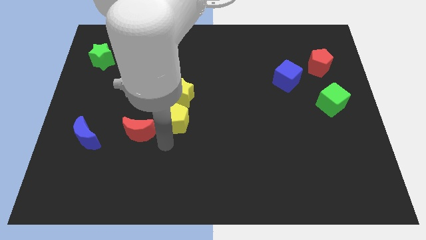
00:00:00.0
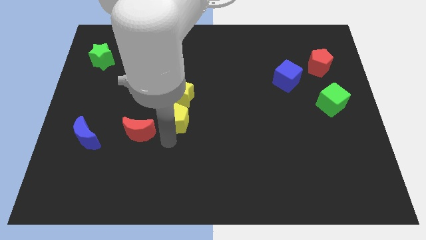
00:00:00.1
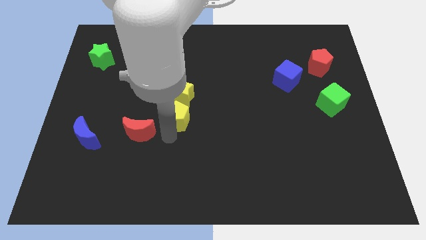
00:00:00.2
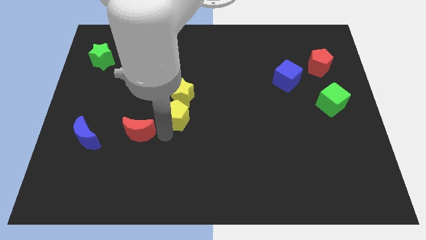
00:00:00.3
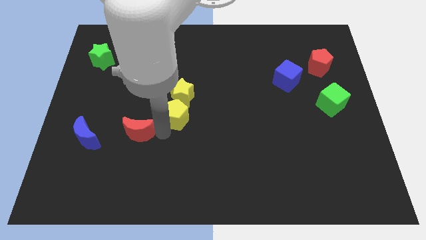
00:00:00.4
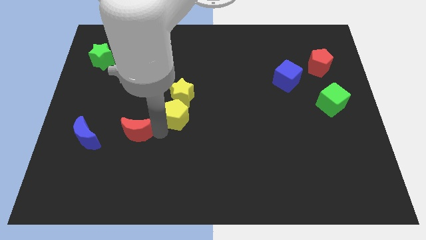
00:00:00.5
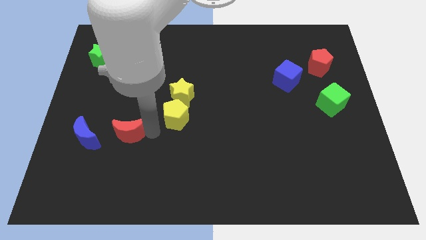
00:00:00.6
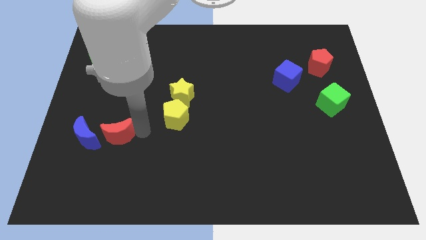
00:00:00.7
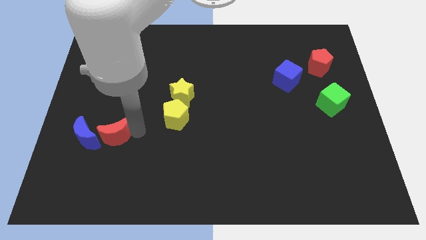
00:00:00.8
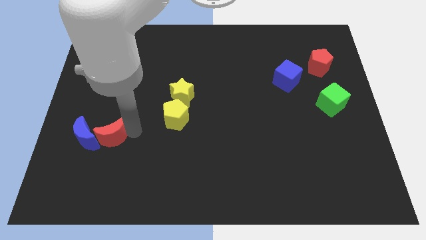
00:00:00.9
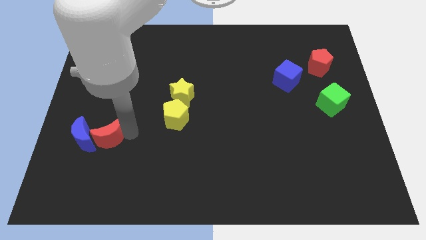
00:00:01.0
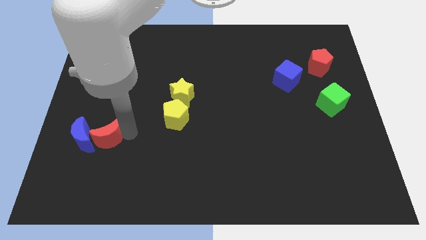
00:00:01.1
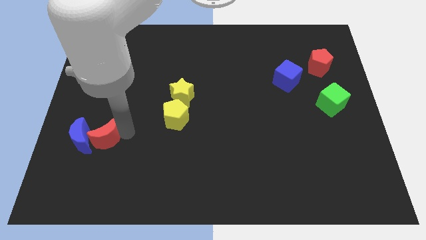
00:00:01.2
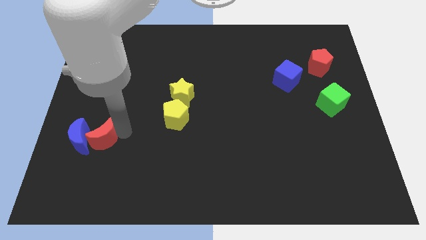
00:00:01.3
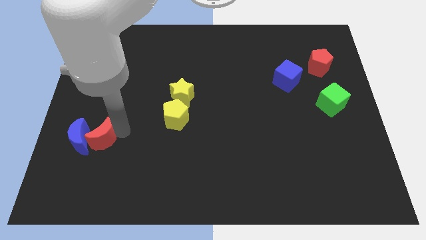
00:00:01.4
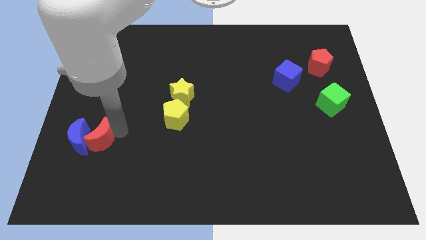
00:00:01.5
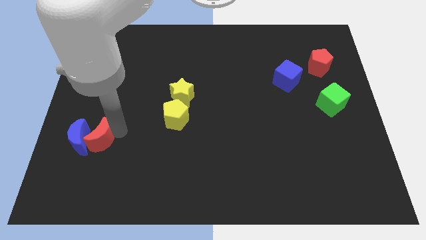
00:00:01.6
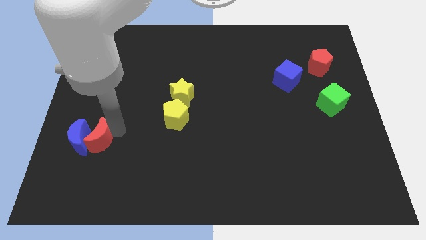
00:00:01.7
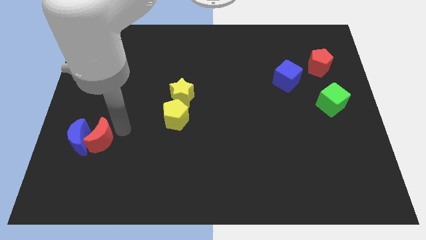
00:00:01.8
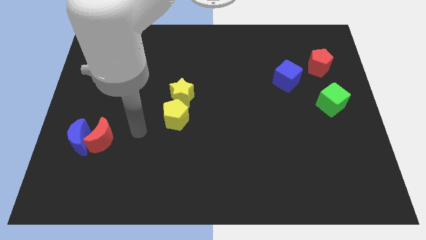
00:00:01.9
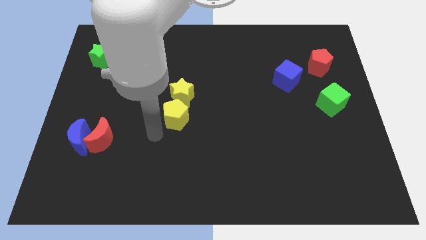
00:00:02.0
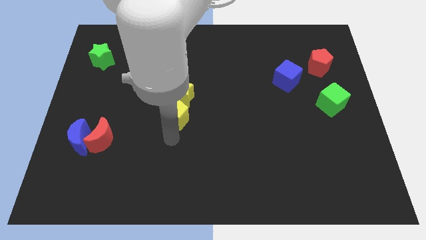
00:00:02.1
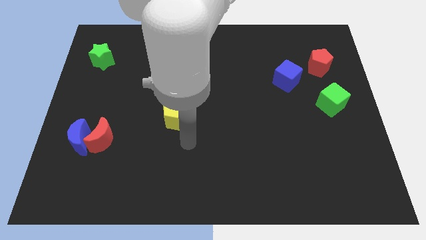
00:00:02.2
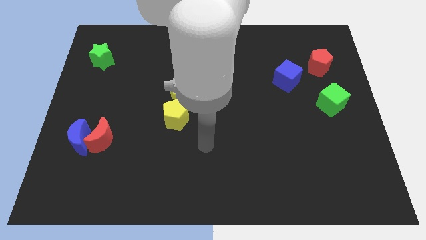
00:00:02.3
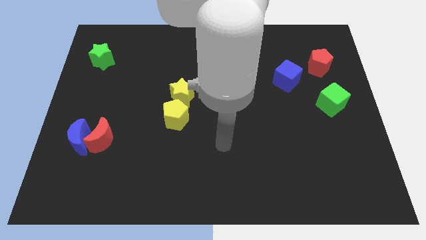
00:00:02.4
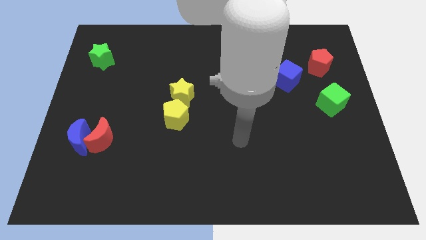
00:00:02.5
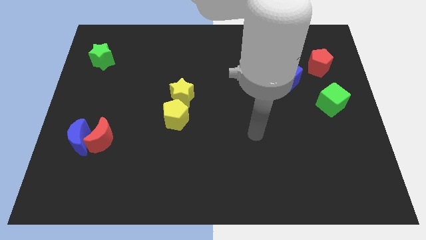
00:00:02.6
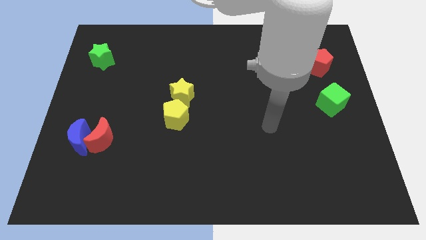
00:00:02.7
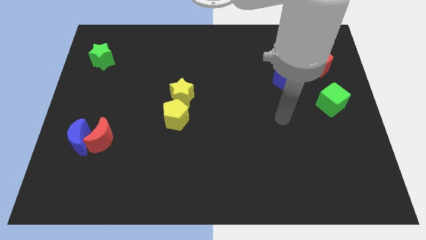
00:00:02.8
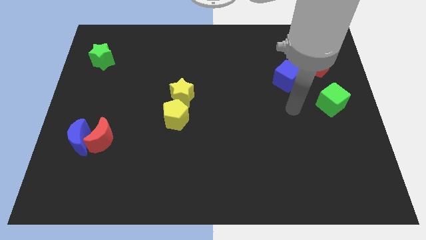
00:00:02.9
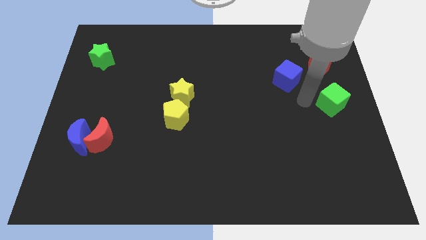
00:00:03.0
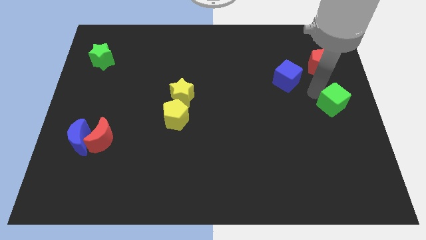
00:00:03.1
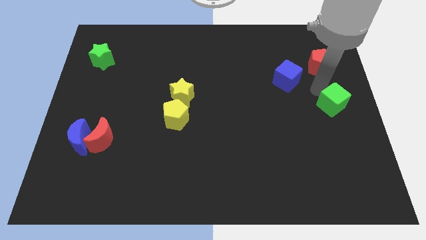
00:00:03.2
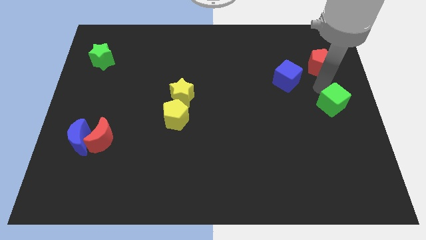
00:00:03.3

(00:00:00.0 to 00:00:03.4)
push the red crescent into the blue crescent

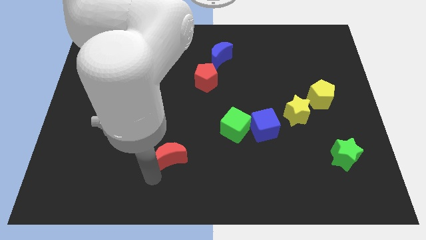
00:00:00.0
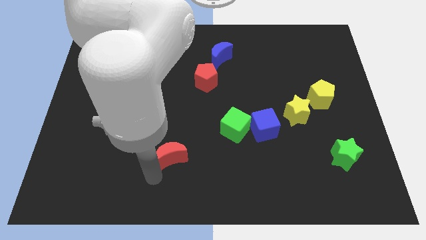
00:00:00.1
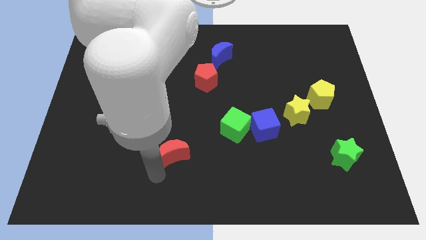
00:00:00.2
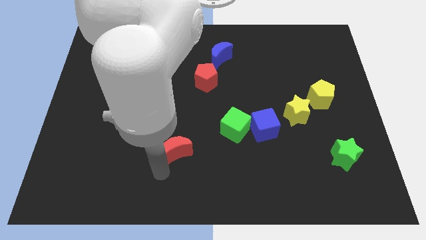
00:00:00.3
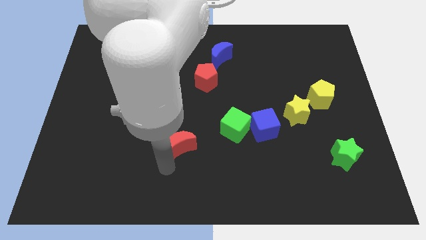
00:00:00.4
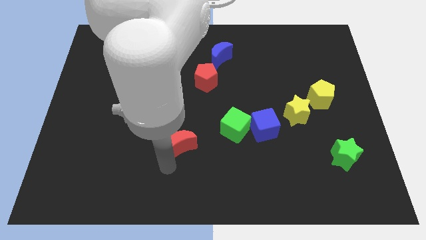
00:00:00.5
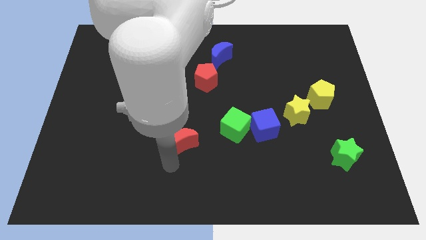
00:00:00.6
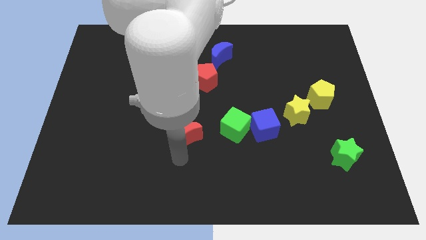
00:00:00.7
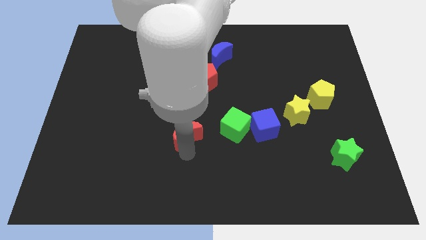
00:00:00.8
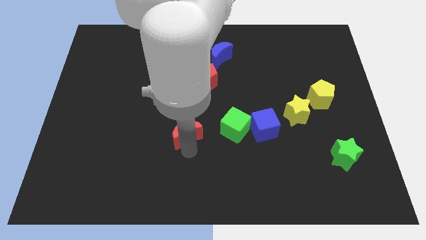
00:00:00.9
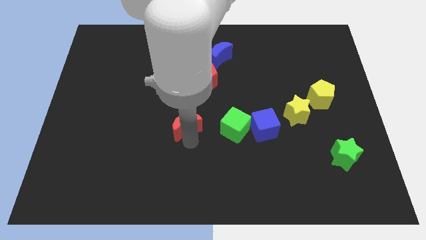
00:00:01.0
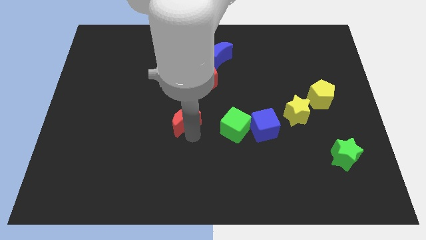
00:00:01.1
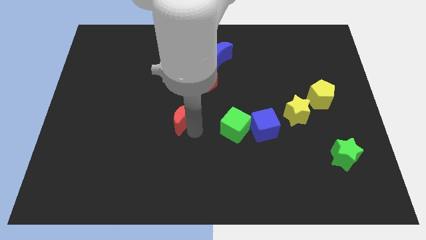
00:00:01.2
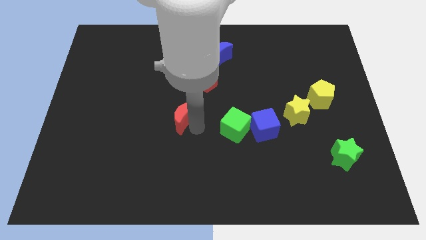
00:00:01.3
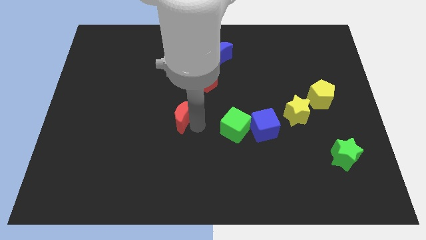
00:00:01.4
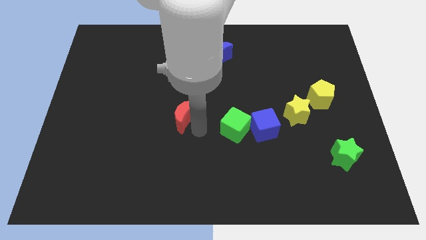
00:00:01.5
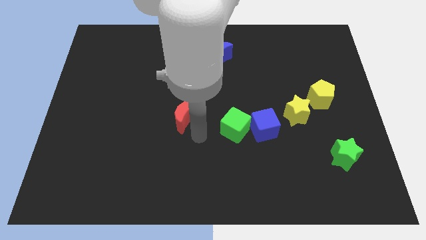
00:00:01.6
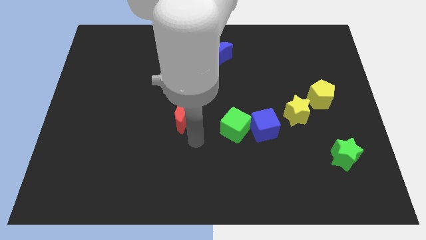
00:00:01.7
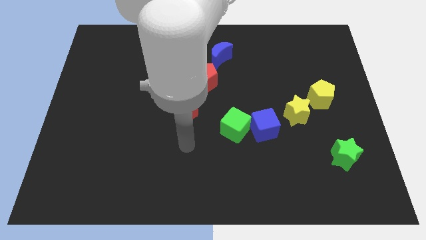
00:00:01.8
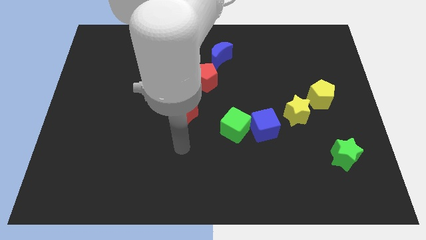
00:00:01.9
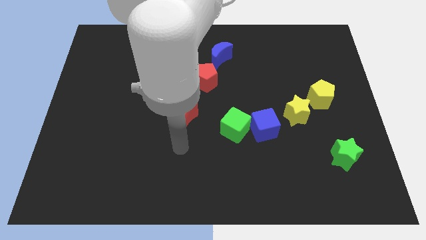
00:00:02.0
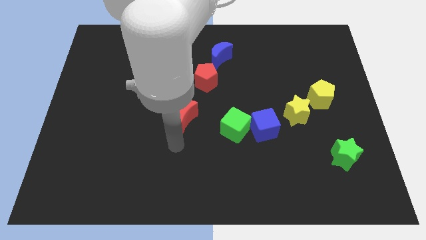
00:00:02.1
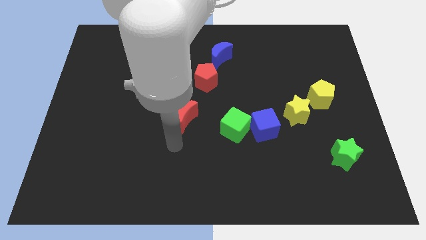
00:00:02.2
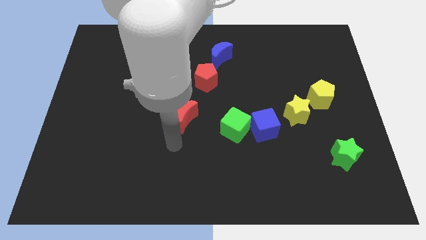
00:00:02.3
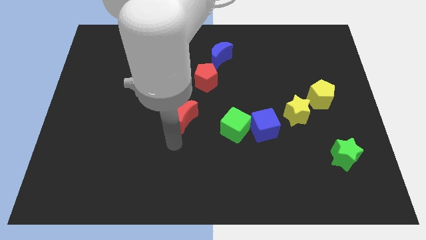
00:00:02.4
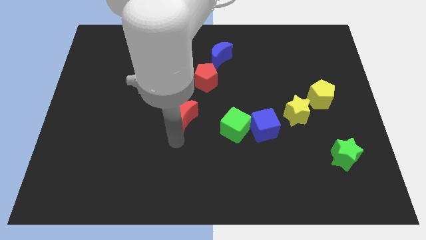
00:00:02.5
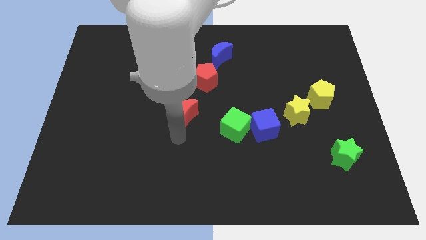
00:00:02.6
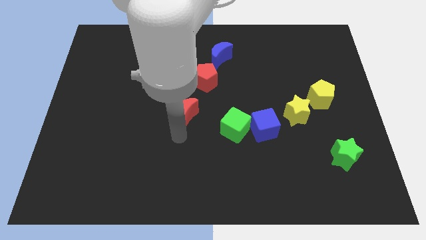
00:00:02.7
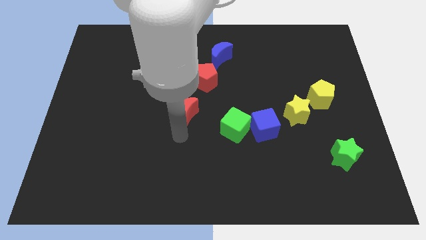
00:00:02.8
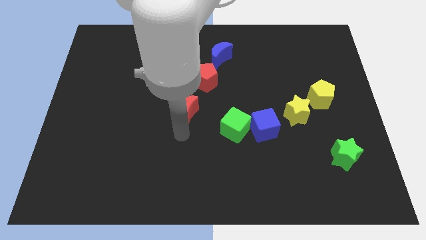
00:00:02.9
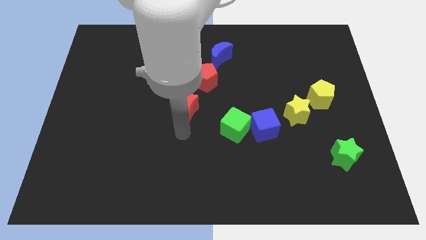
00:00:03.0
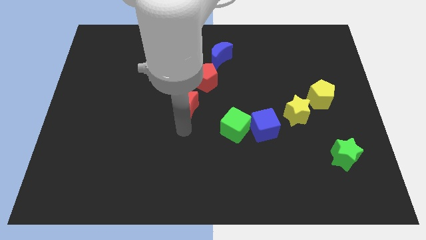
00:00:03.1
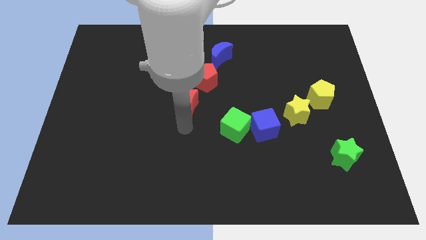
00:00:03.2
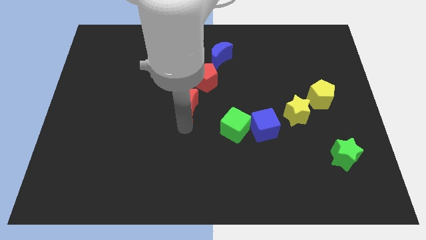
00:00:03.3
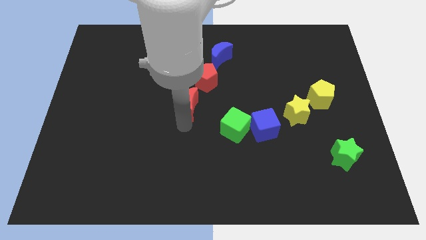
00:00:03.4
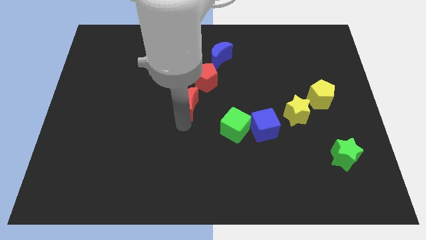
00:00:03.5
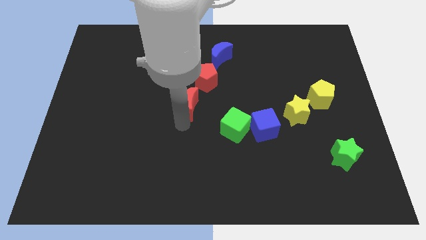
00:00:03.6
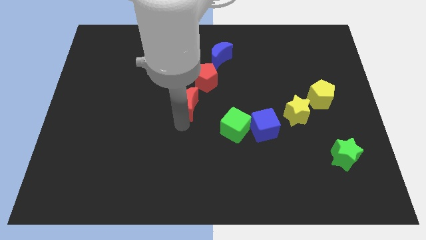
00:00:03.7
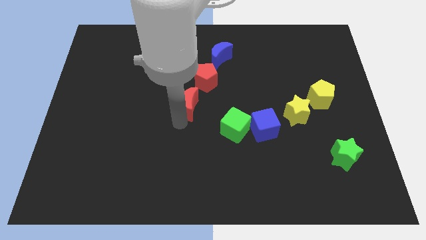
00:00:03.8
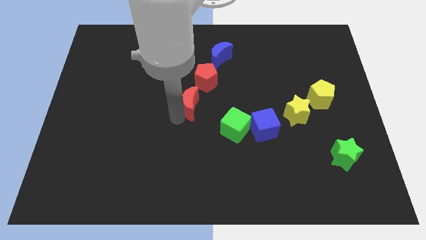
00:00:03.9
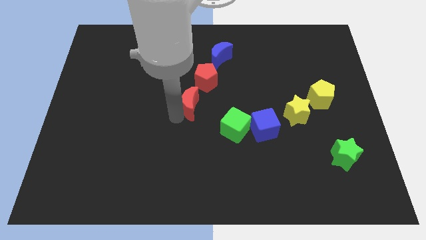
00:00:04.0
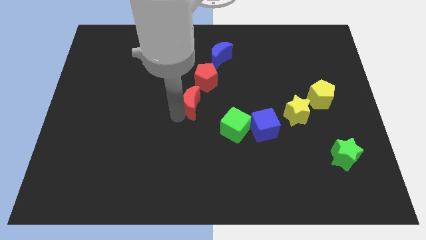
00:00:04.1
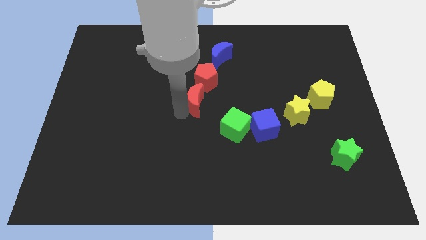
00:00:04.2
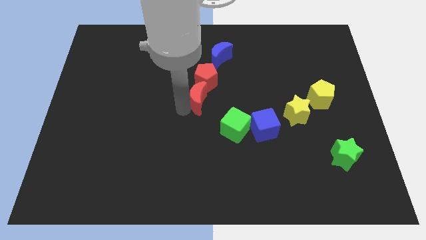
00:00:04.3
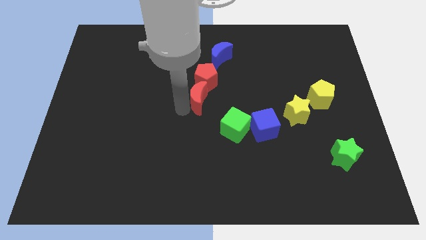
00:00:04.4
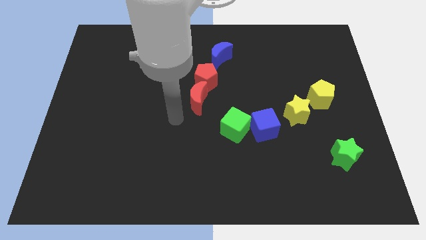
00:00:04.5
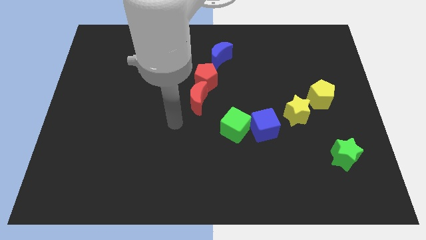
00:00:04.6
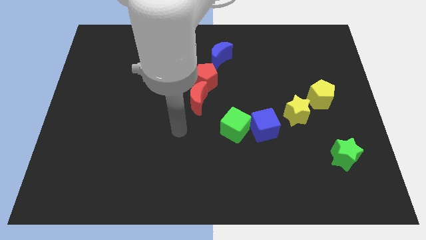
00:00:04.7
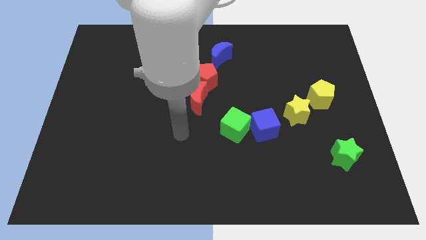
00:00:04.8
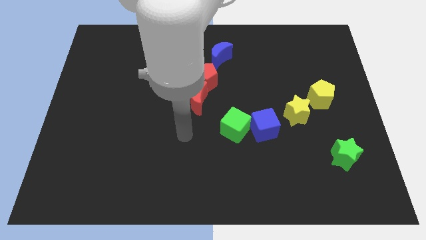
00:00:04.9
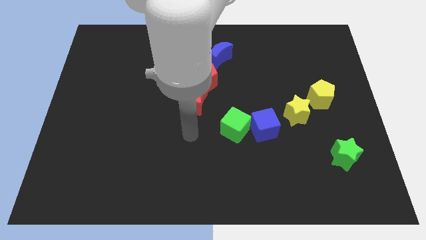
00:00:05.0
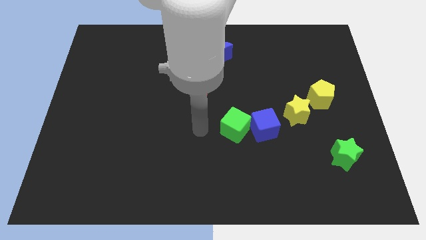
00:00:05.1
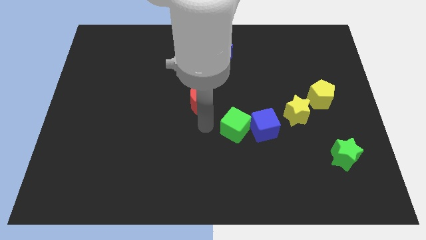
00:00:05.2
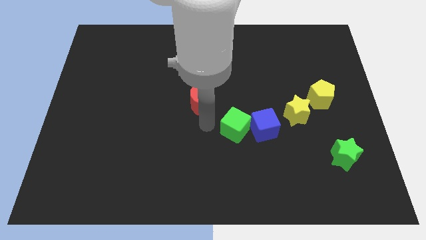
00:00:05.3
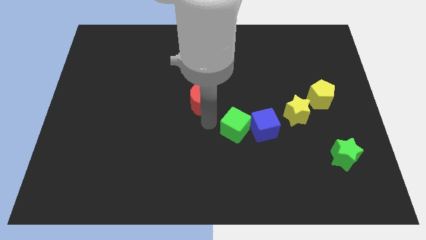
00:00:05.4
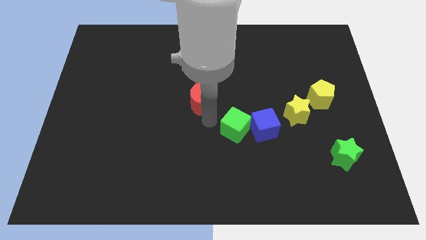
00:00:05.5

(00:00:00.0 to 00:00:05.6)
add the red crescent down to the vertical line of blue moon and red pentagon
